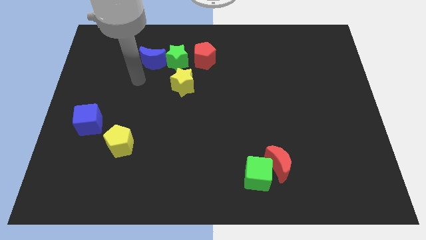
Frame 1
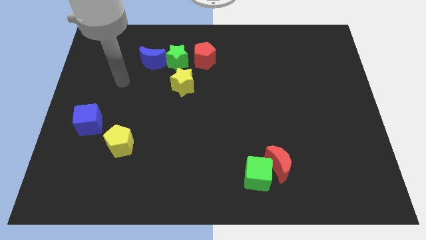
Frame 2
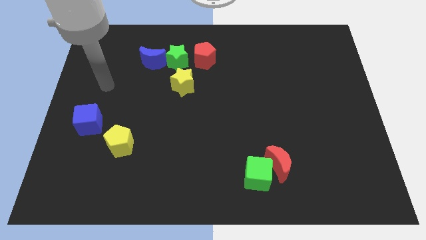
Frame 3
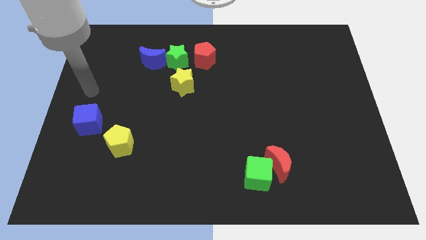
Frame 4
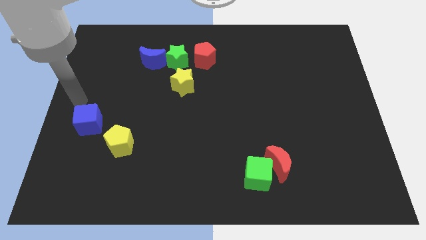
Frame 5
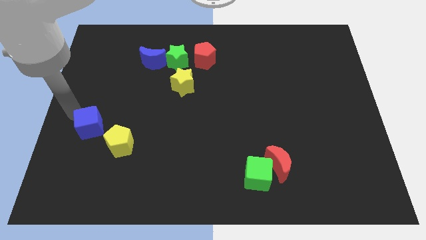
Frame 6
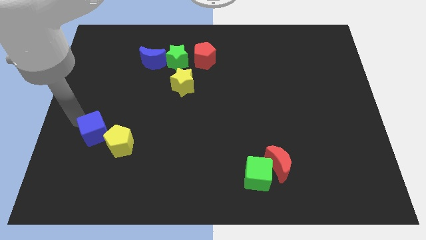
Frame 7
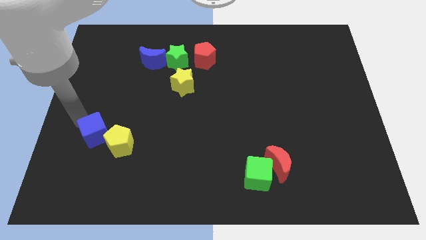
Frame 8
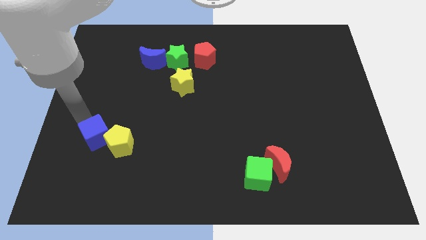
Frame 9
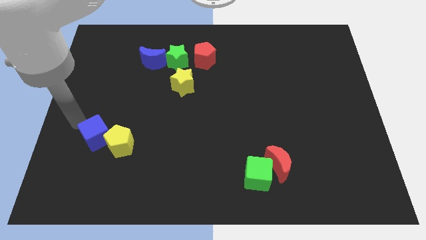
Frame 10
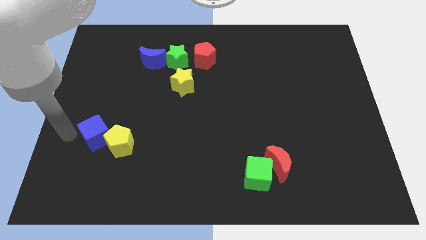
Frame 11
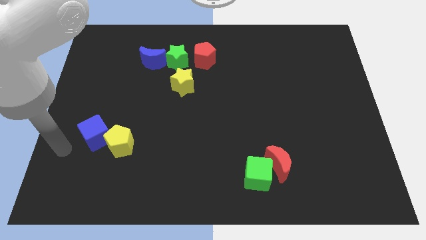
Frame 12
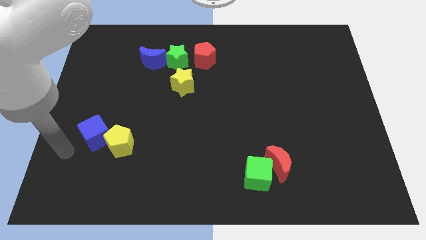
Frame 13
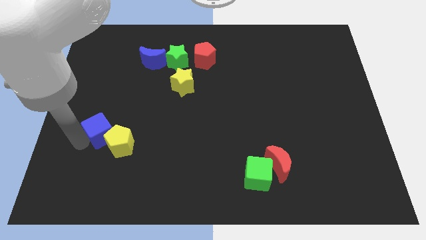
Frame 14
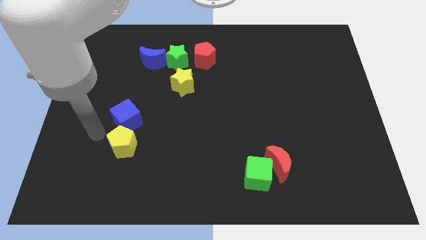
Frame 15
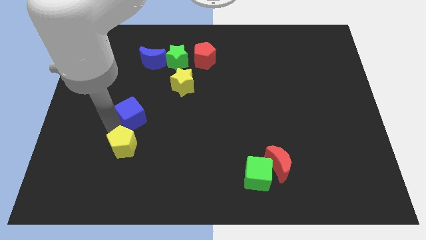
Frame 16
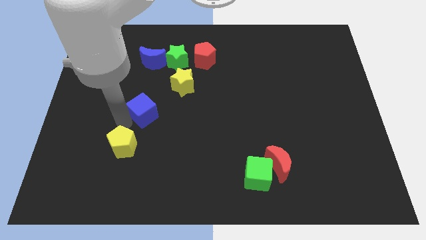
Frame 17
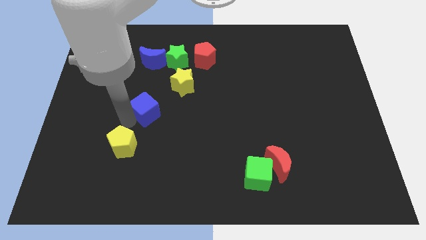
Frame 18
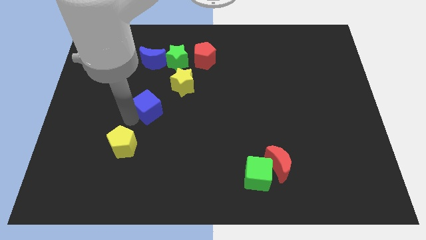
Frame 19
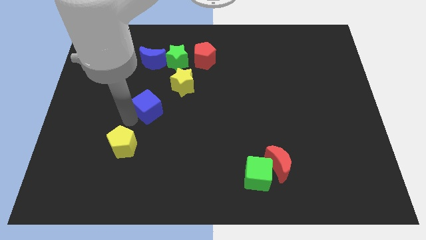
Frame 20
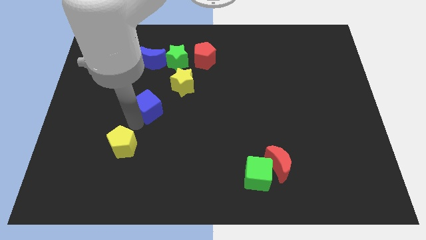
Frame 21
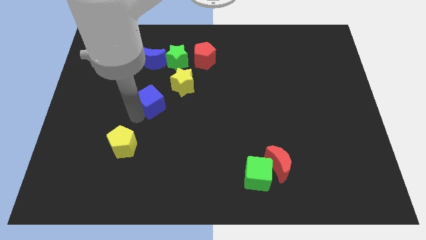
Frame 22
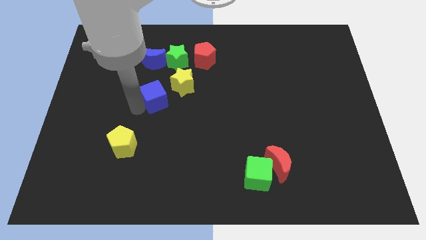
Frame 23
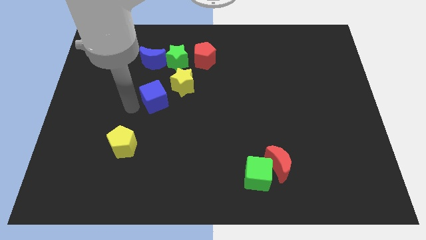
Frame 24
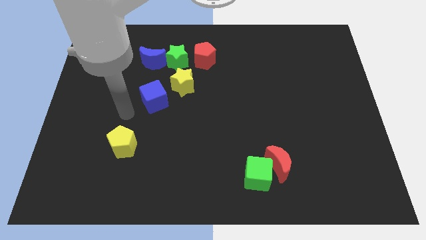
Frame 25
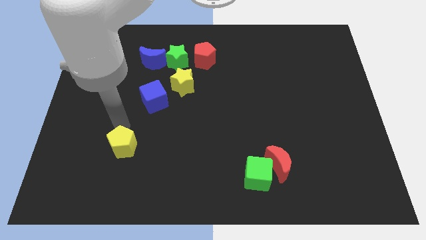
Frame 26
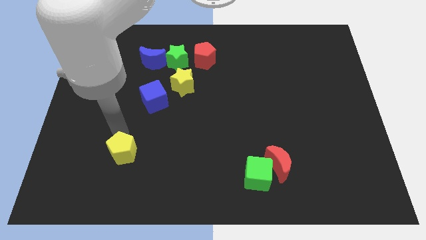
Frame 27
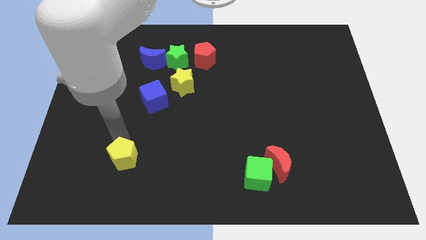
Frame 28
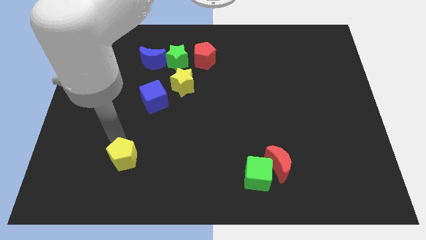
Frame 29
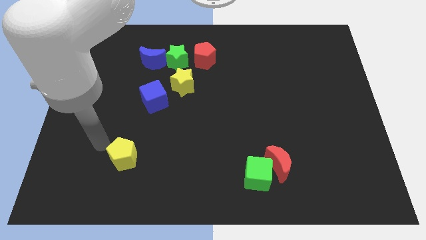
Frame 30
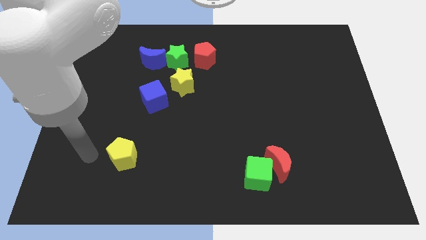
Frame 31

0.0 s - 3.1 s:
push the blue cube towards the yellow star

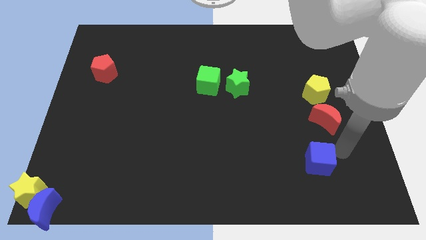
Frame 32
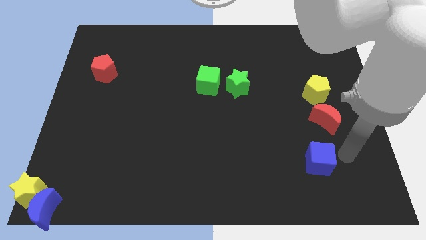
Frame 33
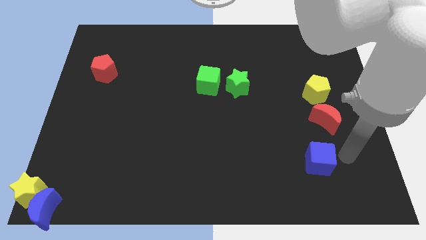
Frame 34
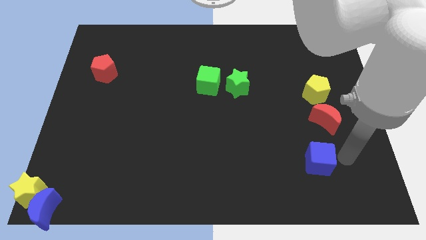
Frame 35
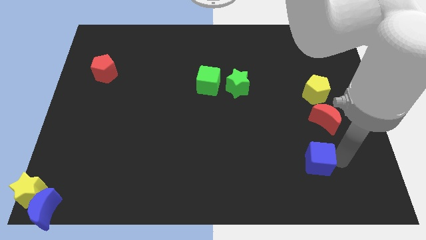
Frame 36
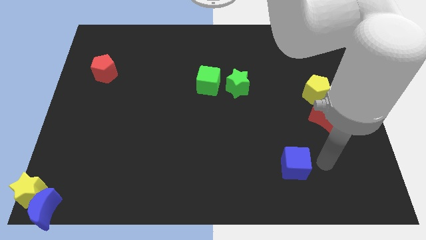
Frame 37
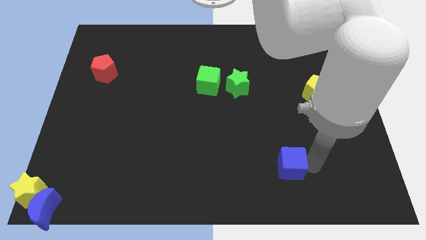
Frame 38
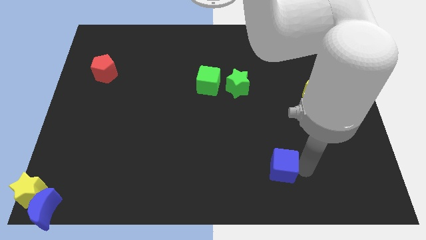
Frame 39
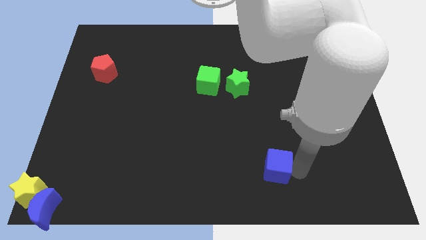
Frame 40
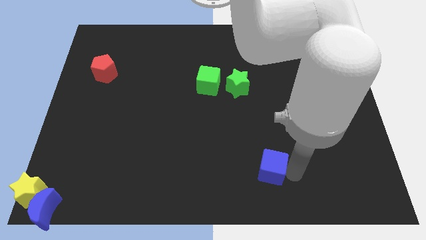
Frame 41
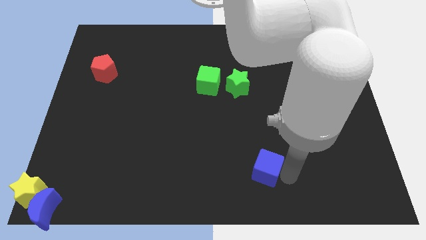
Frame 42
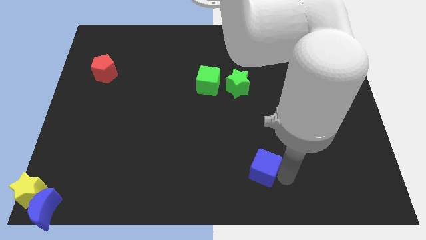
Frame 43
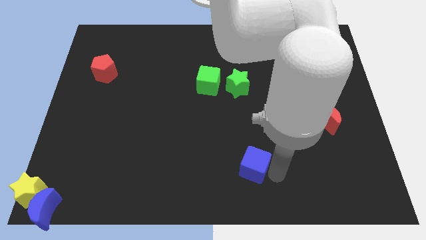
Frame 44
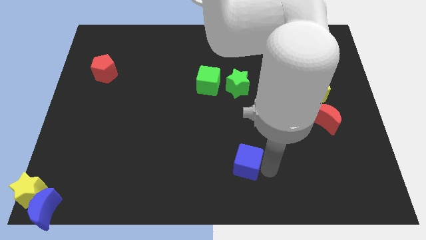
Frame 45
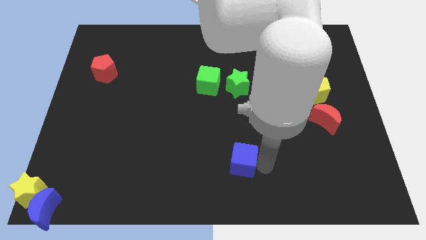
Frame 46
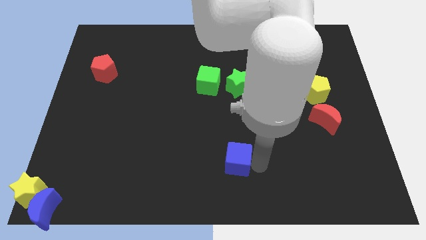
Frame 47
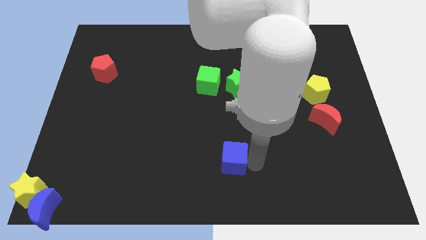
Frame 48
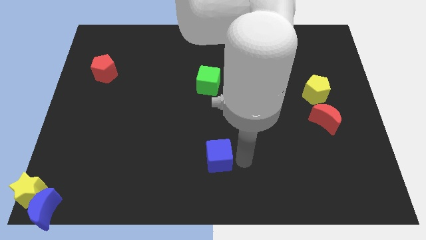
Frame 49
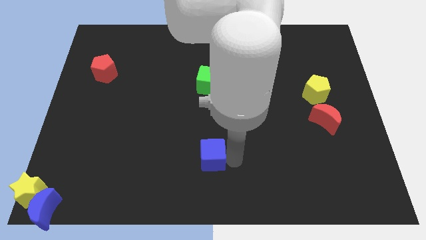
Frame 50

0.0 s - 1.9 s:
put the blue cube vertically below the green cube

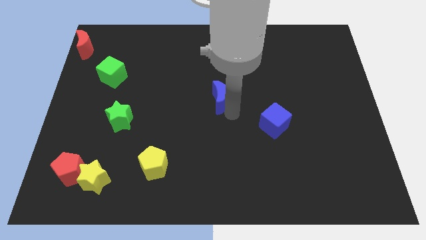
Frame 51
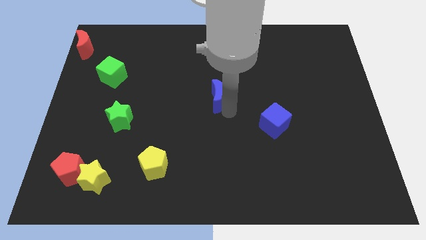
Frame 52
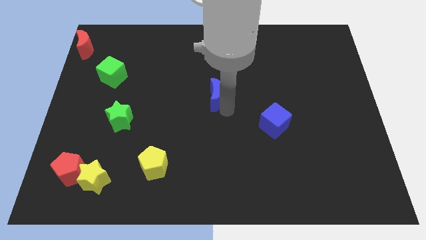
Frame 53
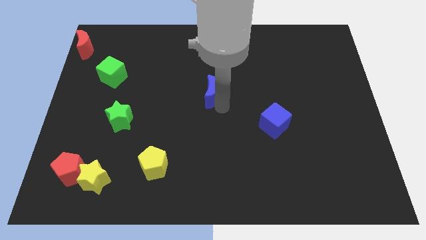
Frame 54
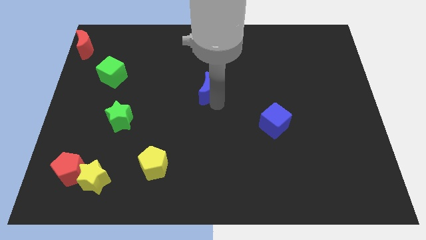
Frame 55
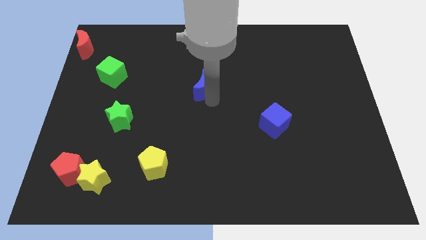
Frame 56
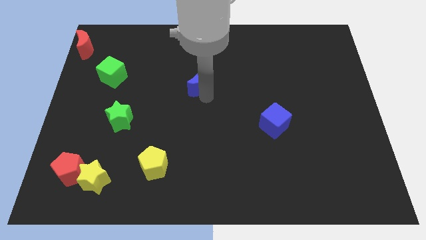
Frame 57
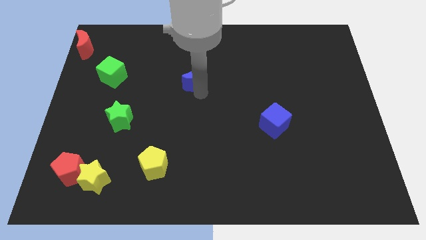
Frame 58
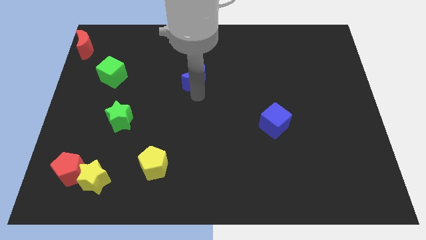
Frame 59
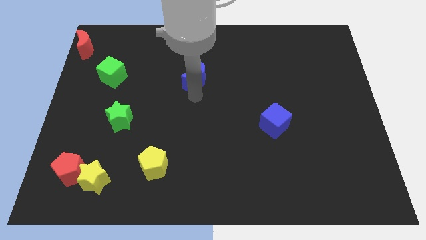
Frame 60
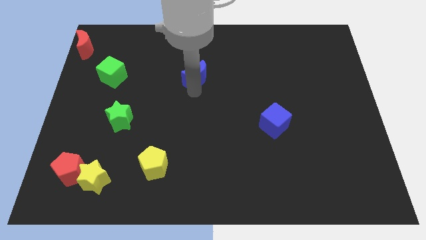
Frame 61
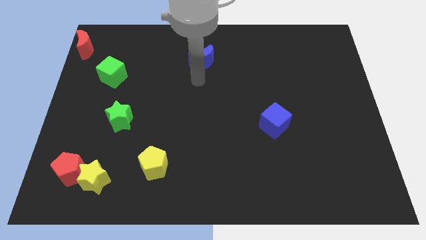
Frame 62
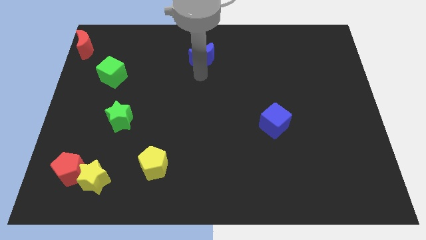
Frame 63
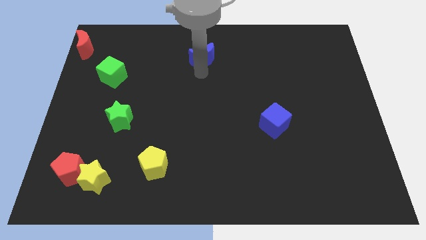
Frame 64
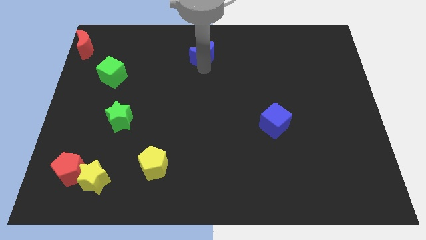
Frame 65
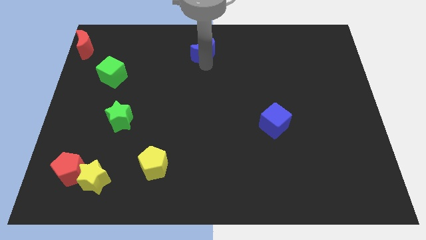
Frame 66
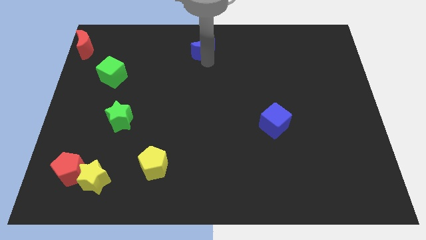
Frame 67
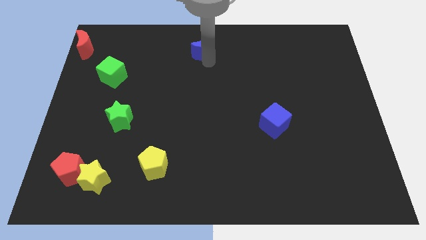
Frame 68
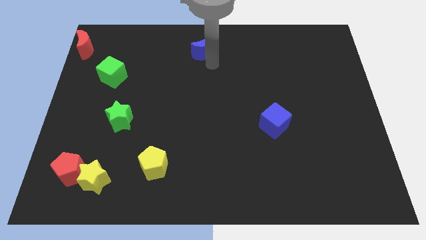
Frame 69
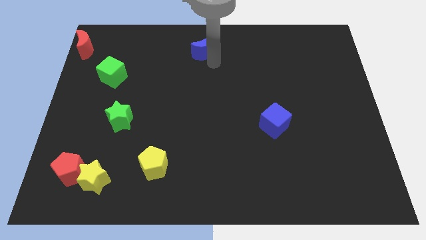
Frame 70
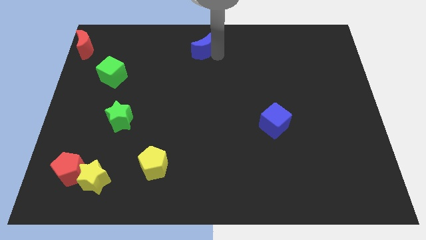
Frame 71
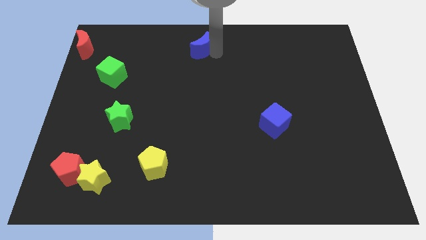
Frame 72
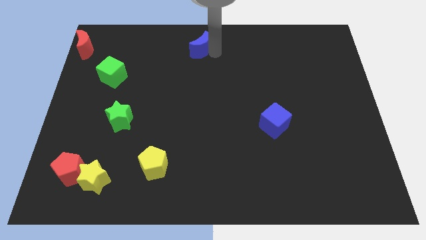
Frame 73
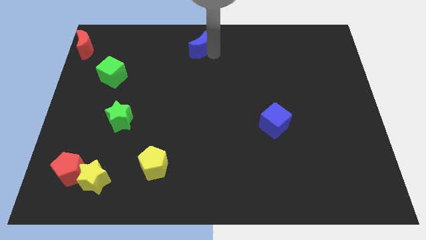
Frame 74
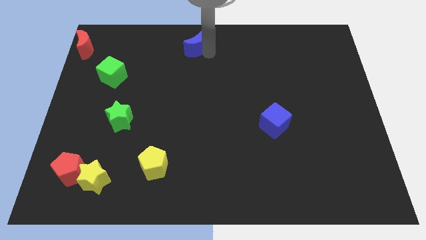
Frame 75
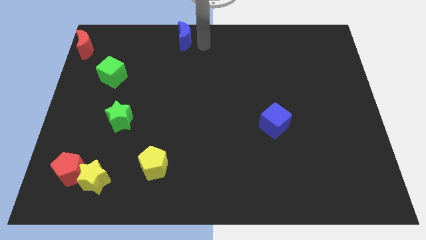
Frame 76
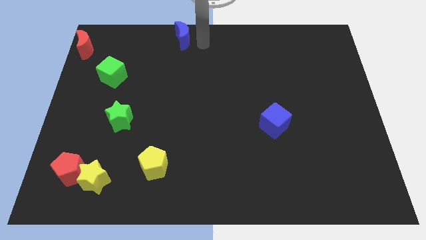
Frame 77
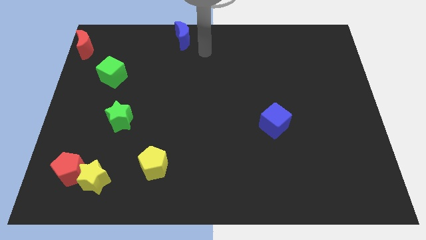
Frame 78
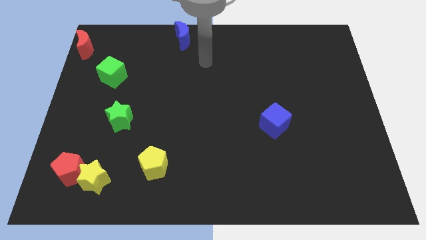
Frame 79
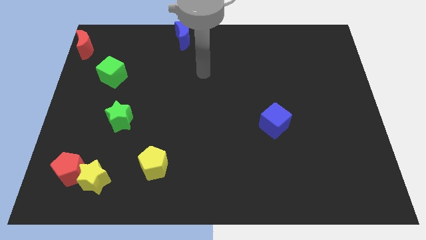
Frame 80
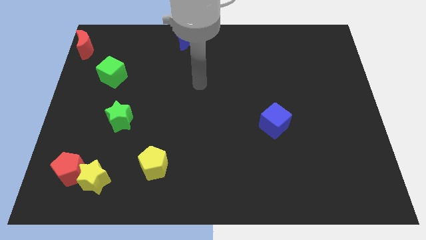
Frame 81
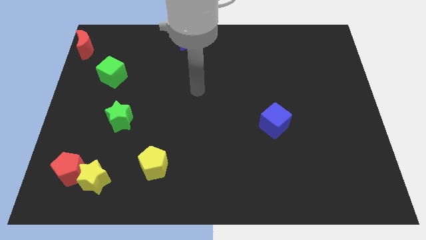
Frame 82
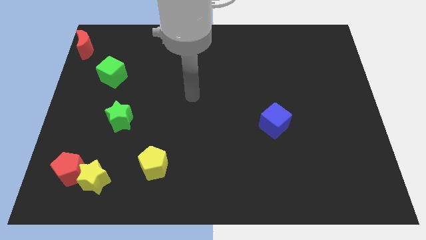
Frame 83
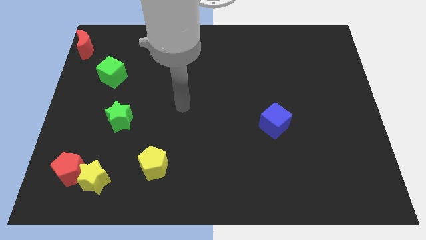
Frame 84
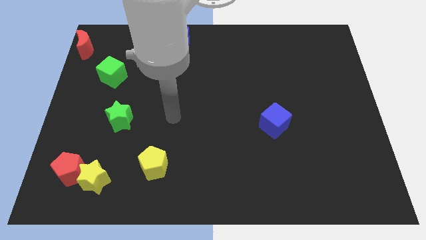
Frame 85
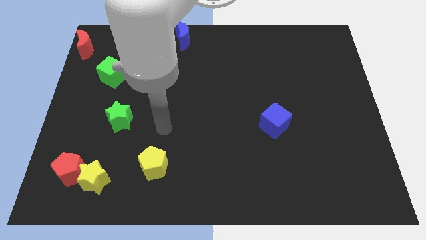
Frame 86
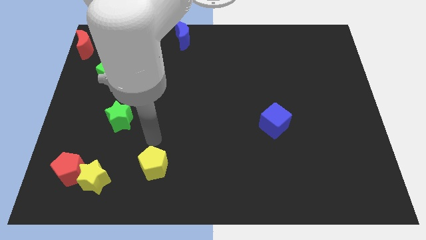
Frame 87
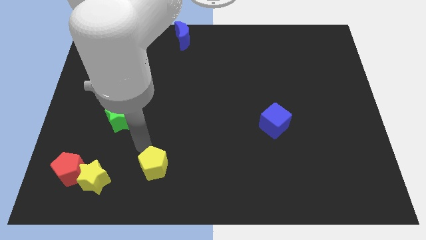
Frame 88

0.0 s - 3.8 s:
place the blue moon above the green cube
